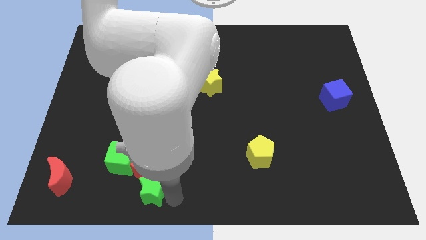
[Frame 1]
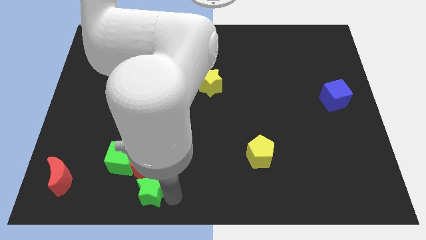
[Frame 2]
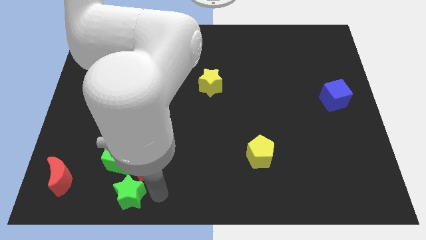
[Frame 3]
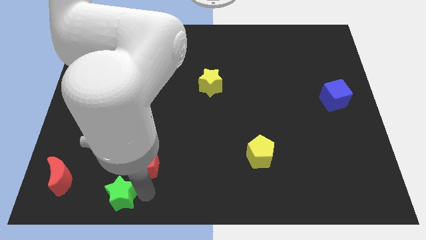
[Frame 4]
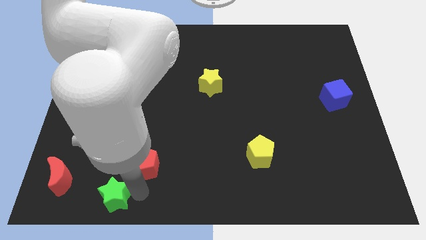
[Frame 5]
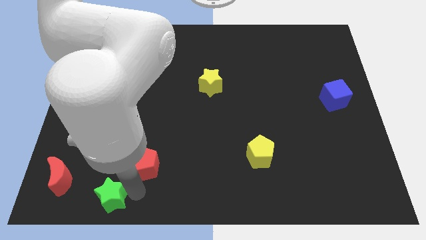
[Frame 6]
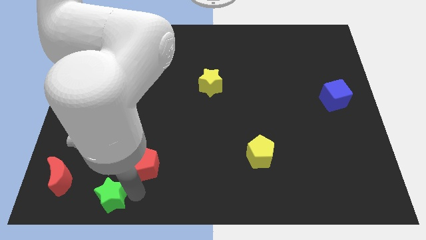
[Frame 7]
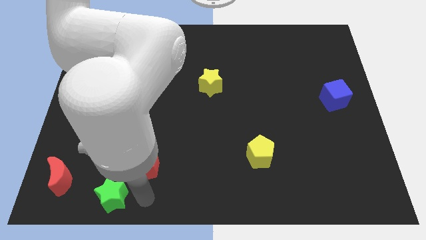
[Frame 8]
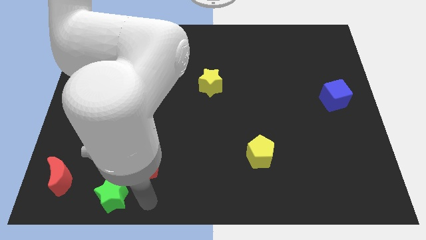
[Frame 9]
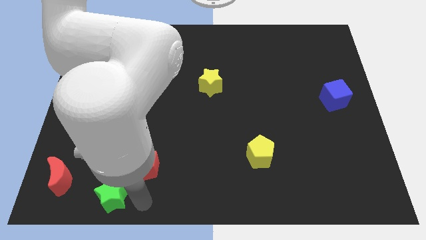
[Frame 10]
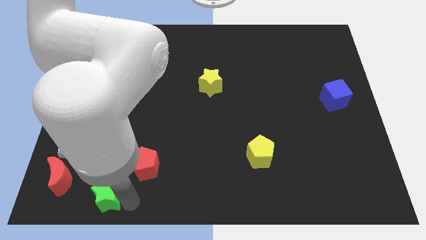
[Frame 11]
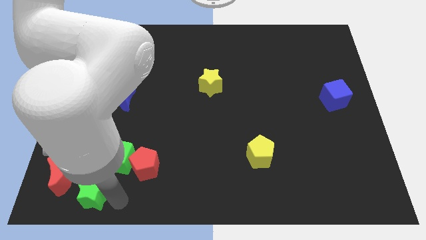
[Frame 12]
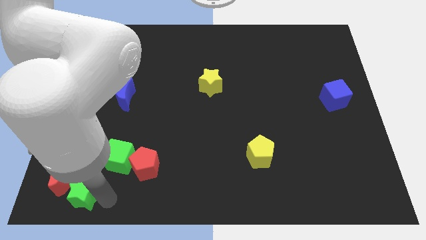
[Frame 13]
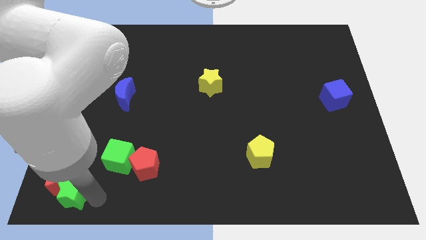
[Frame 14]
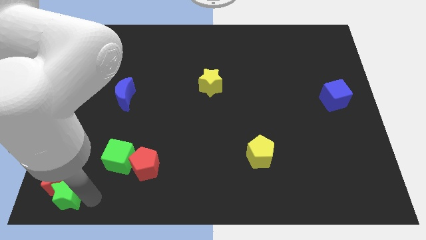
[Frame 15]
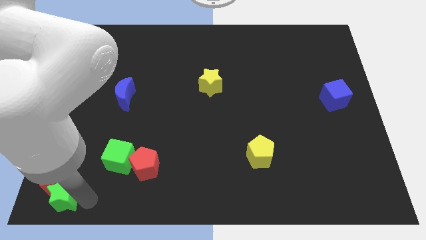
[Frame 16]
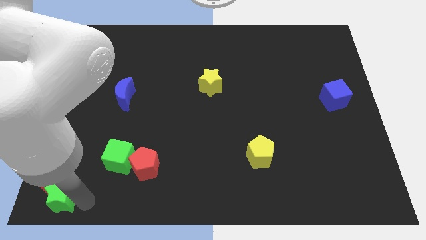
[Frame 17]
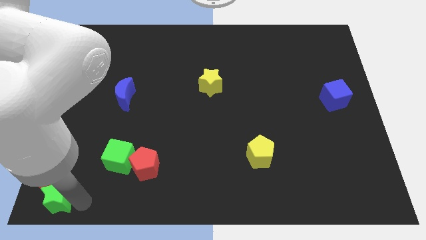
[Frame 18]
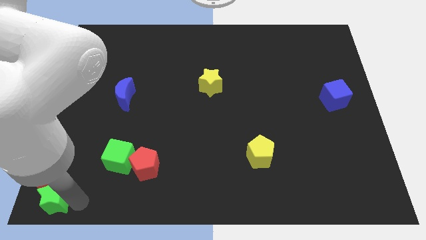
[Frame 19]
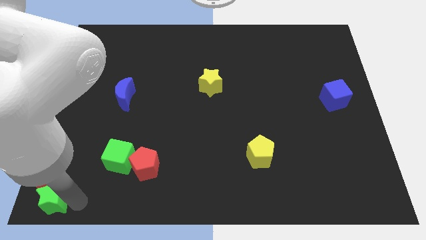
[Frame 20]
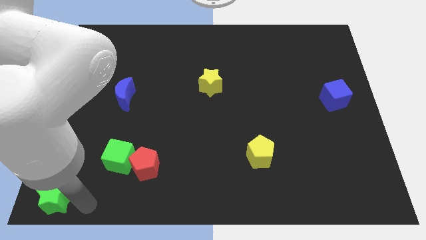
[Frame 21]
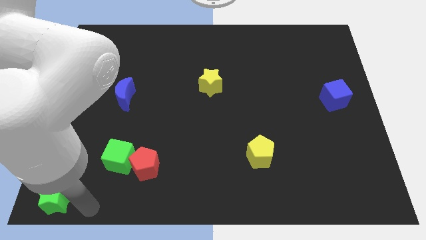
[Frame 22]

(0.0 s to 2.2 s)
slide green star to the bottom left

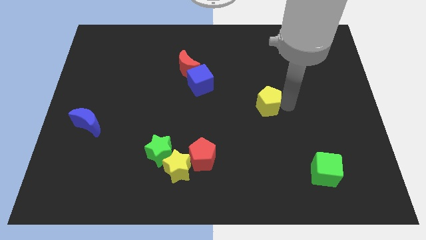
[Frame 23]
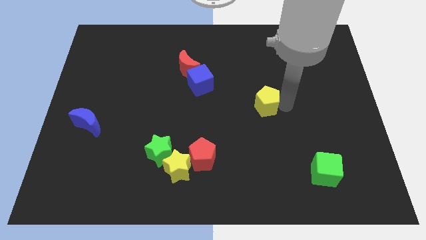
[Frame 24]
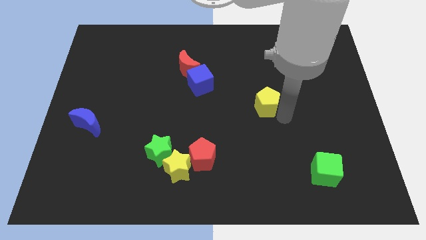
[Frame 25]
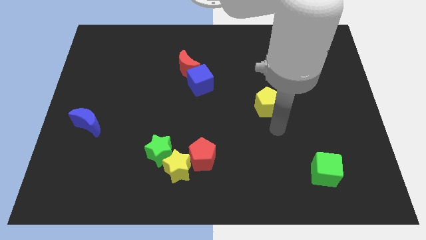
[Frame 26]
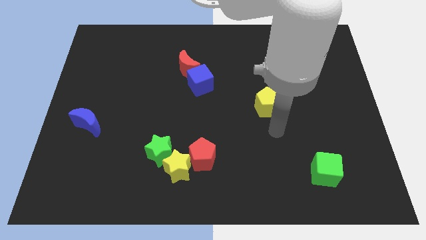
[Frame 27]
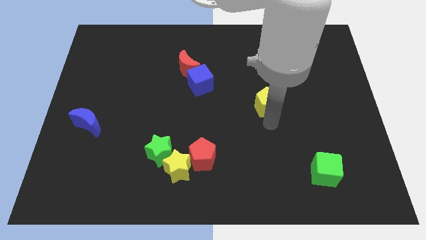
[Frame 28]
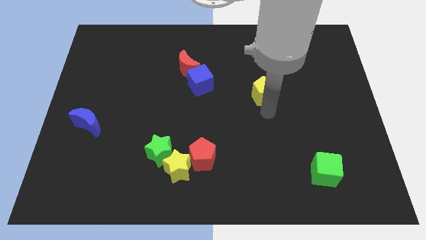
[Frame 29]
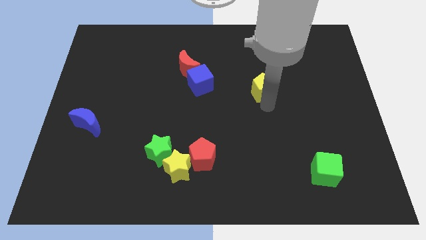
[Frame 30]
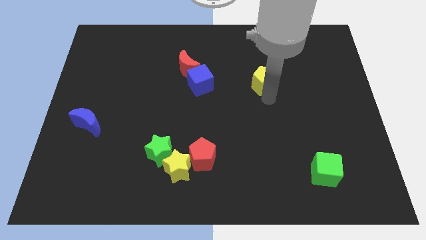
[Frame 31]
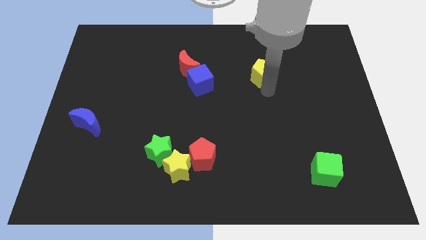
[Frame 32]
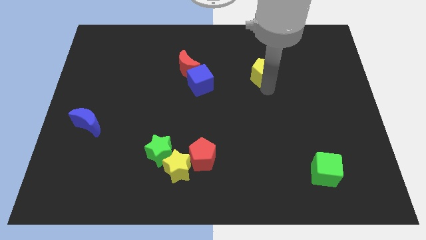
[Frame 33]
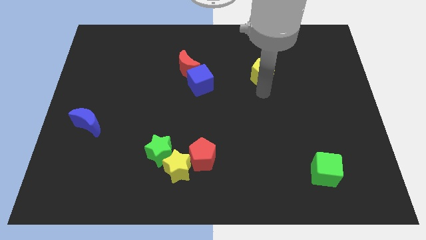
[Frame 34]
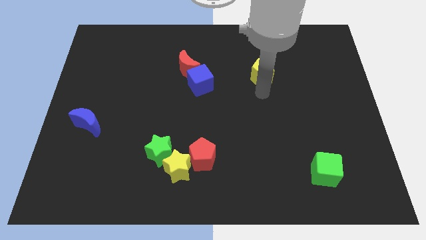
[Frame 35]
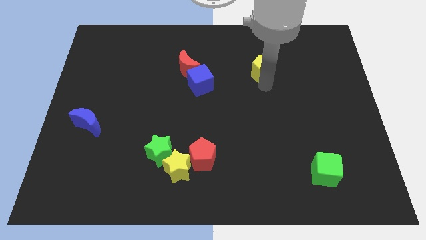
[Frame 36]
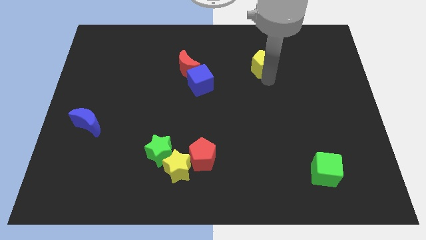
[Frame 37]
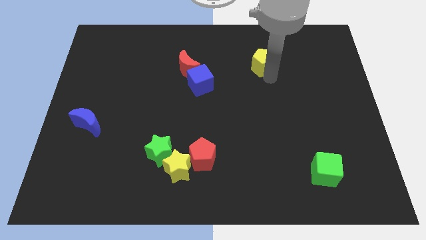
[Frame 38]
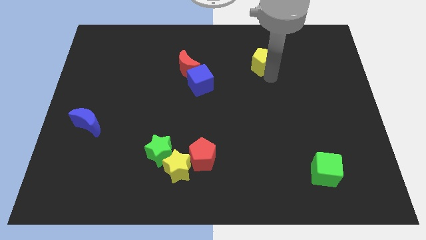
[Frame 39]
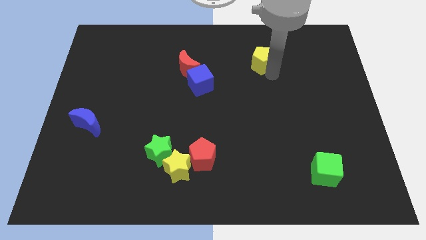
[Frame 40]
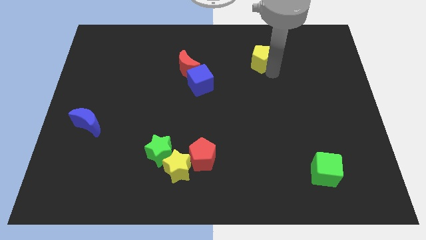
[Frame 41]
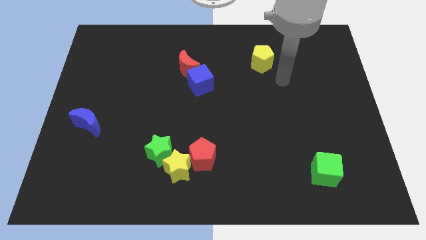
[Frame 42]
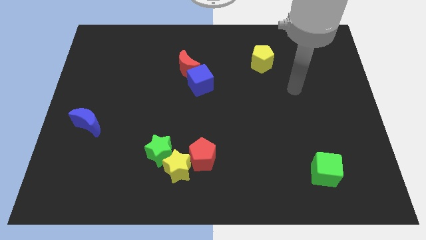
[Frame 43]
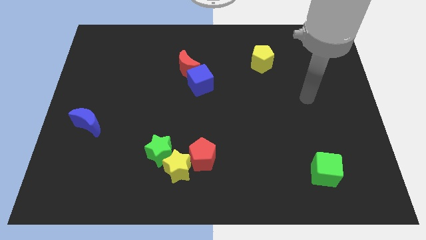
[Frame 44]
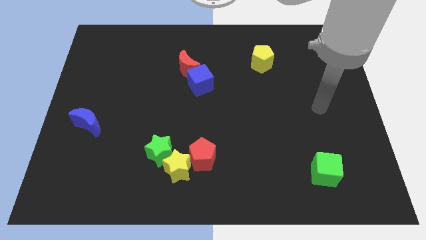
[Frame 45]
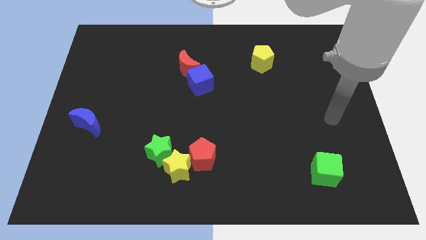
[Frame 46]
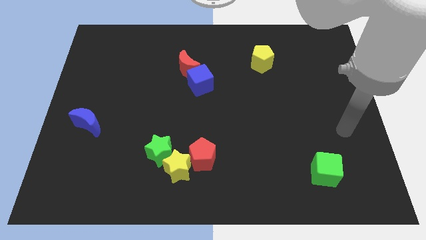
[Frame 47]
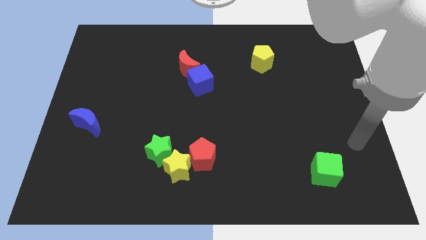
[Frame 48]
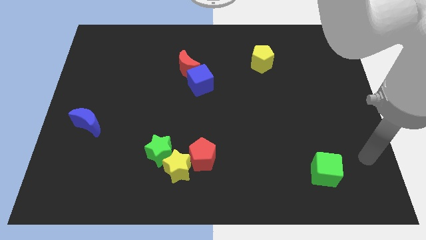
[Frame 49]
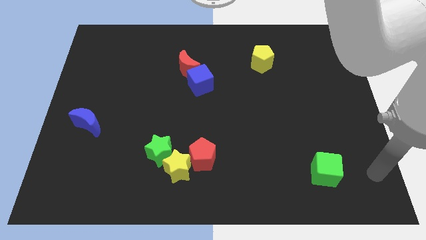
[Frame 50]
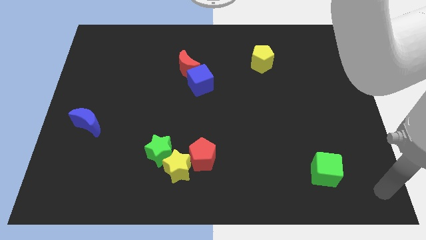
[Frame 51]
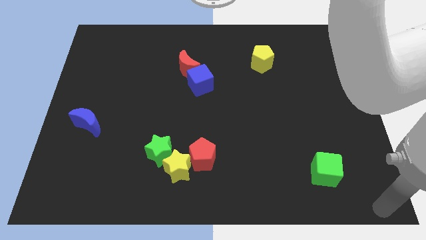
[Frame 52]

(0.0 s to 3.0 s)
place the yellow pentagon to the right of the red moon

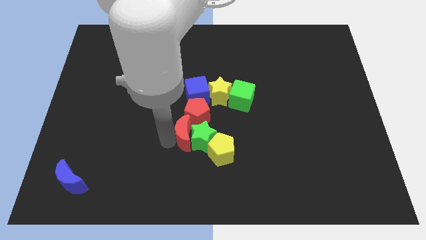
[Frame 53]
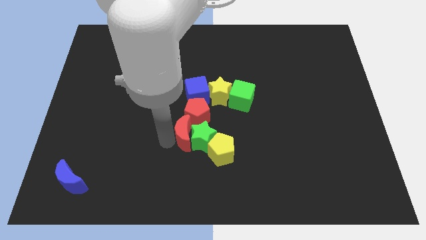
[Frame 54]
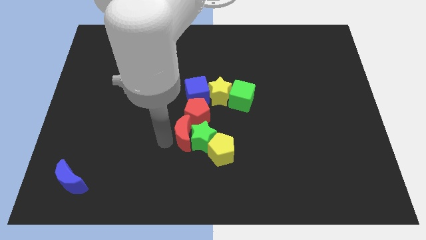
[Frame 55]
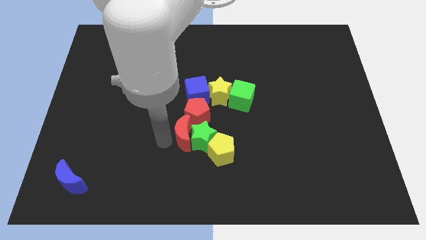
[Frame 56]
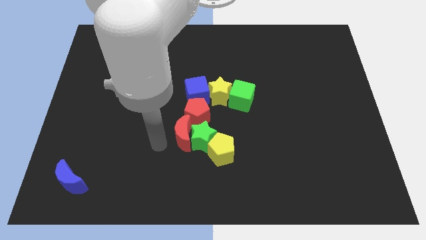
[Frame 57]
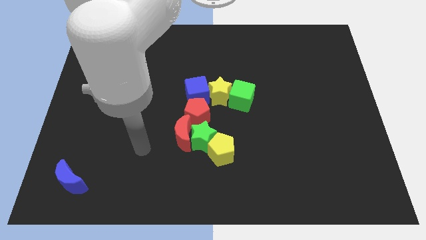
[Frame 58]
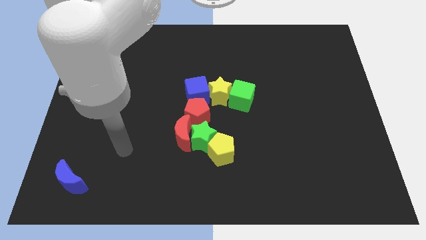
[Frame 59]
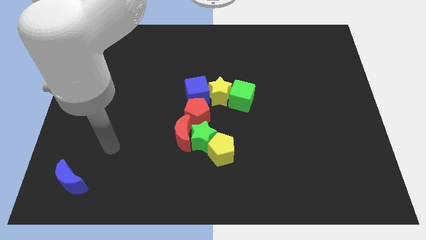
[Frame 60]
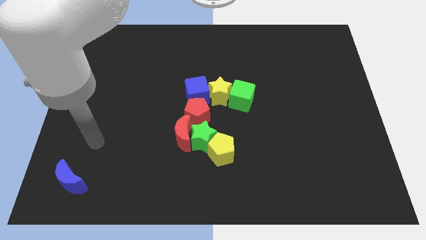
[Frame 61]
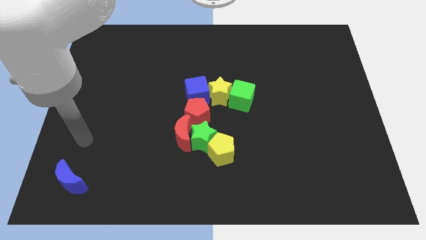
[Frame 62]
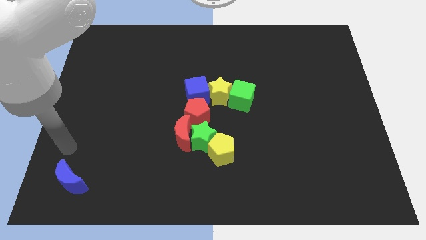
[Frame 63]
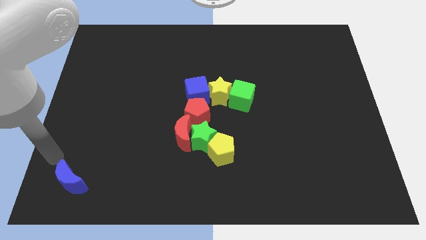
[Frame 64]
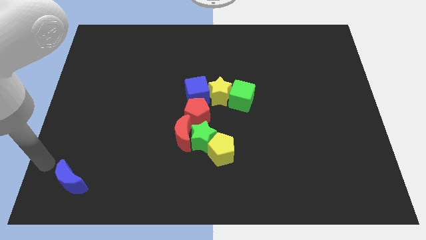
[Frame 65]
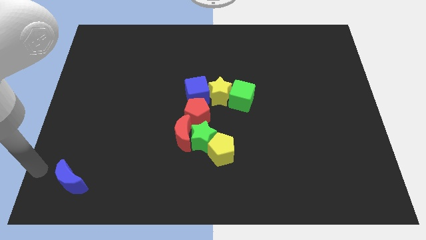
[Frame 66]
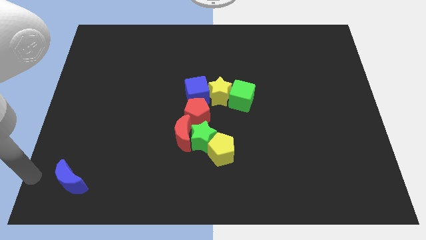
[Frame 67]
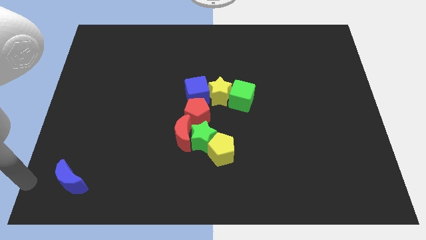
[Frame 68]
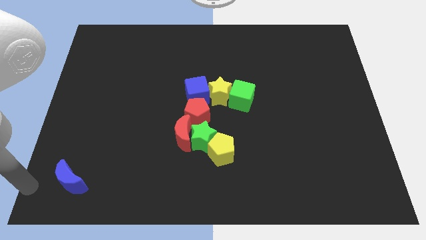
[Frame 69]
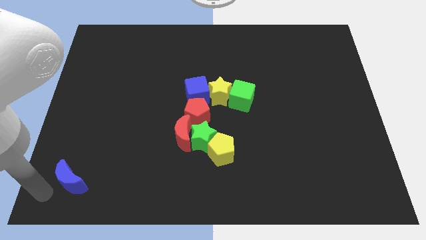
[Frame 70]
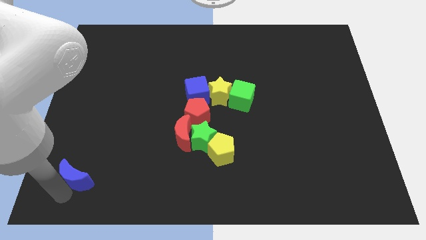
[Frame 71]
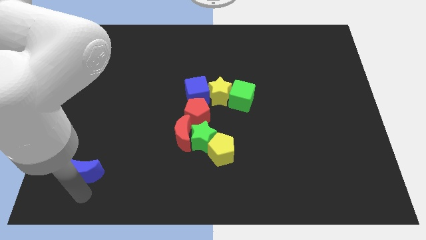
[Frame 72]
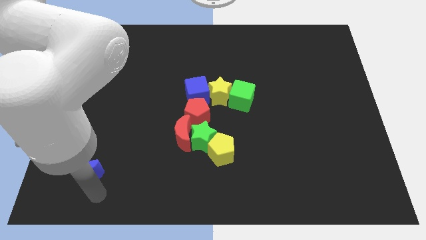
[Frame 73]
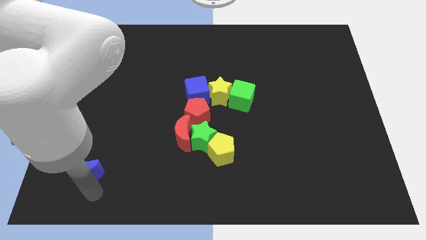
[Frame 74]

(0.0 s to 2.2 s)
move the arm away from the red moon

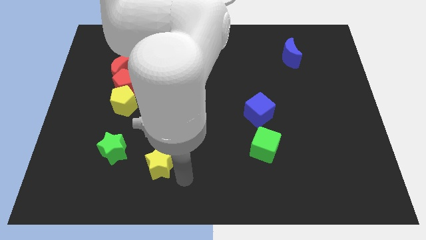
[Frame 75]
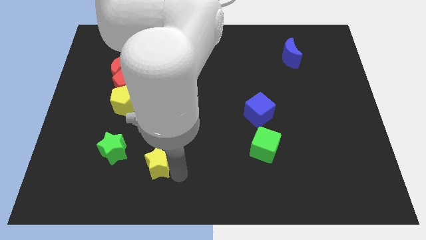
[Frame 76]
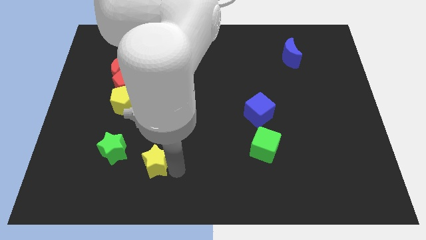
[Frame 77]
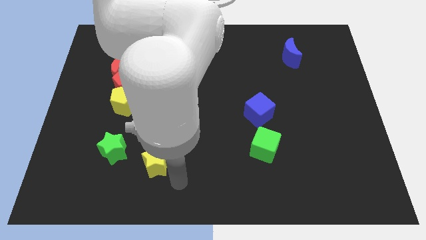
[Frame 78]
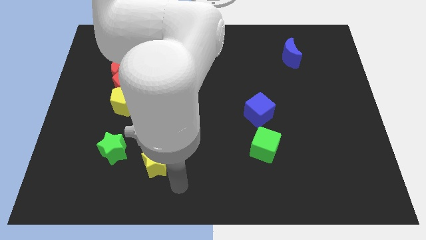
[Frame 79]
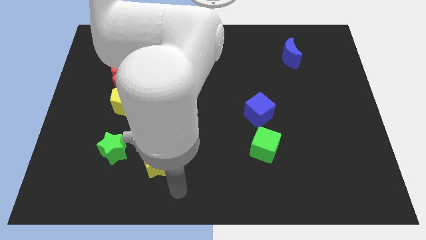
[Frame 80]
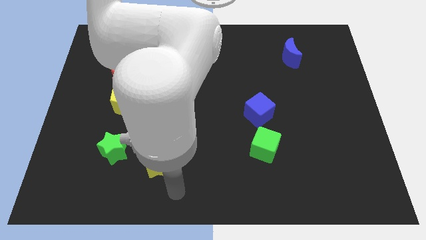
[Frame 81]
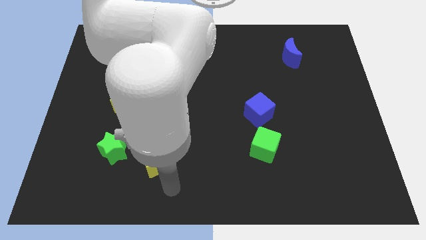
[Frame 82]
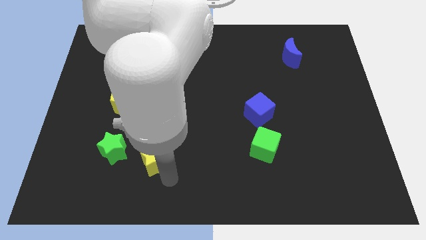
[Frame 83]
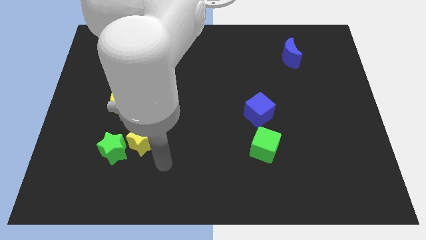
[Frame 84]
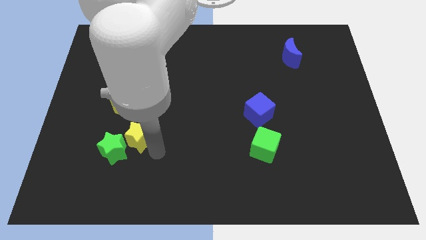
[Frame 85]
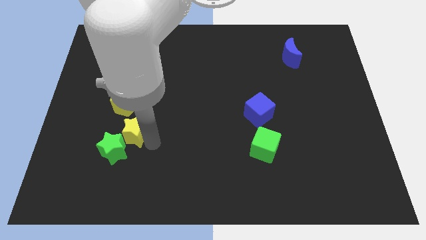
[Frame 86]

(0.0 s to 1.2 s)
push yellow star beside green star

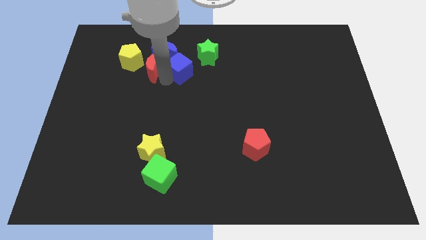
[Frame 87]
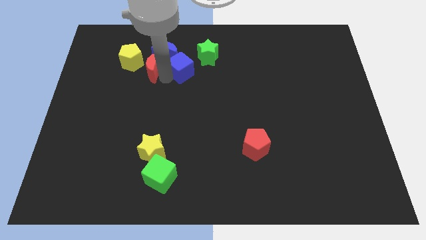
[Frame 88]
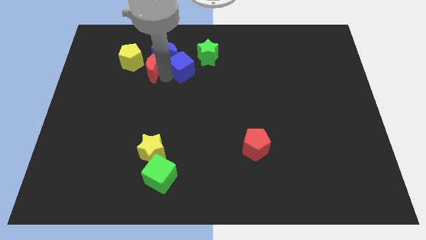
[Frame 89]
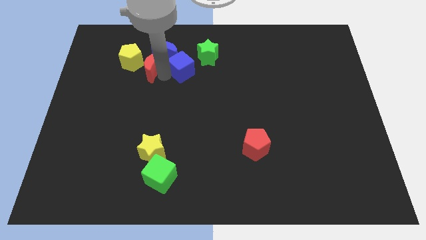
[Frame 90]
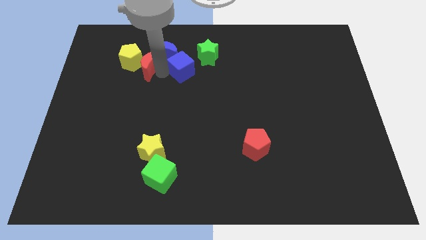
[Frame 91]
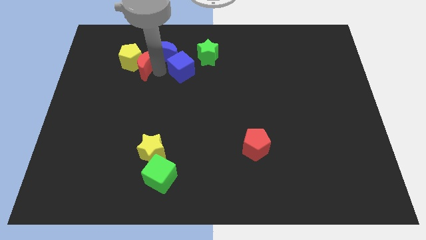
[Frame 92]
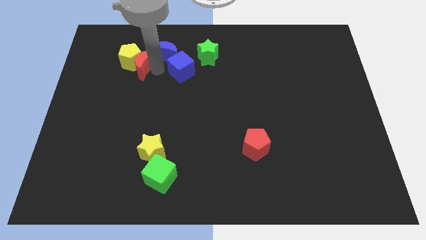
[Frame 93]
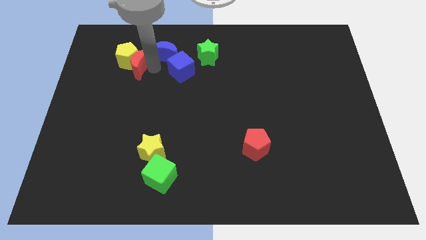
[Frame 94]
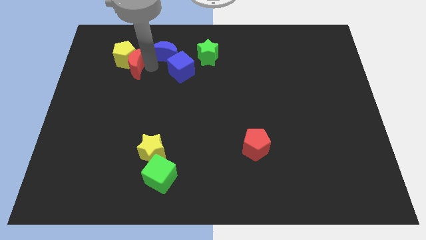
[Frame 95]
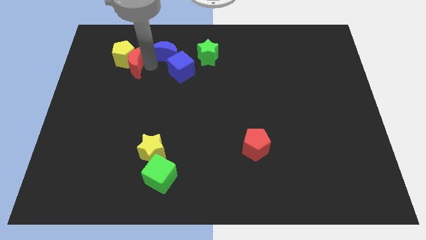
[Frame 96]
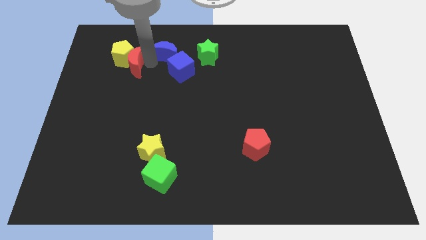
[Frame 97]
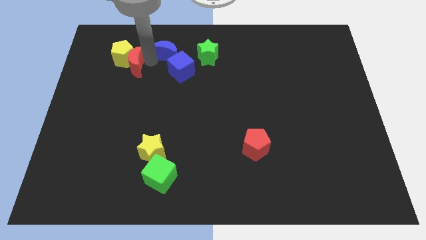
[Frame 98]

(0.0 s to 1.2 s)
move the red moon into the yellow pentagon
